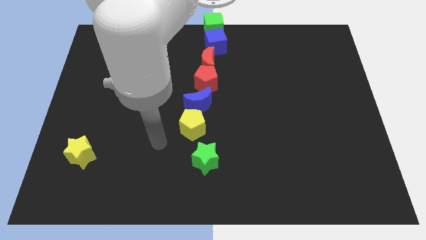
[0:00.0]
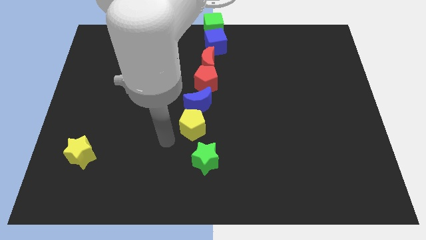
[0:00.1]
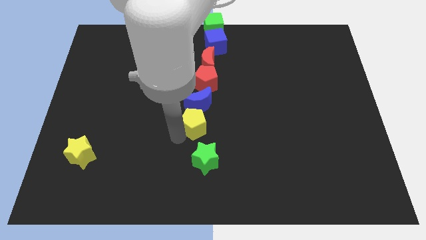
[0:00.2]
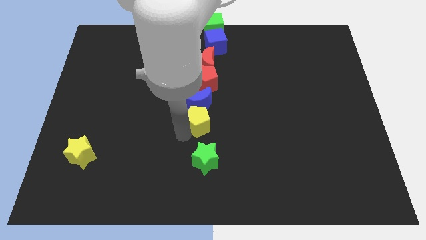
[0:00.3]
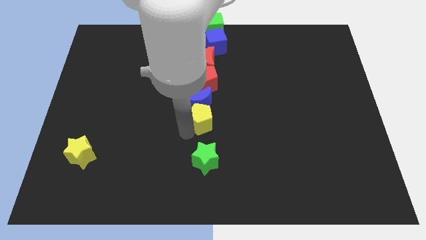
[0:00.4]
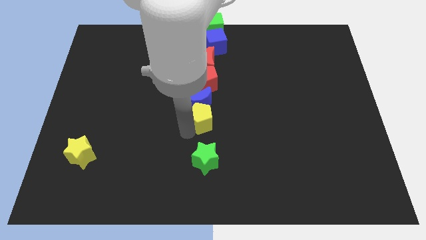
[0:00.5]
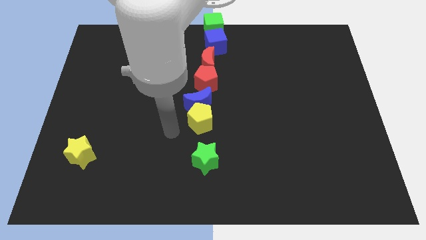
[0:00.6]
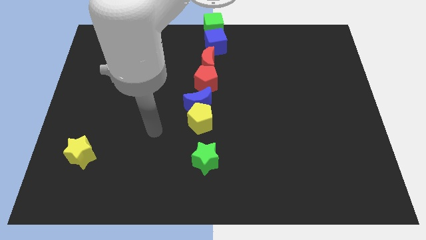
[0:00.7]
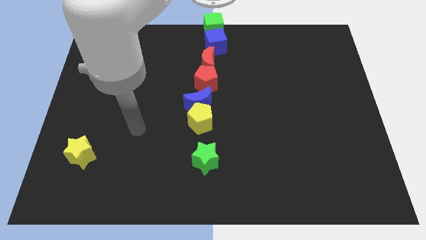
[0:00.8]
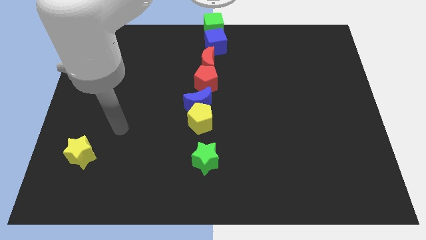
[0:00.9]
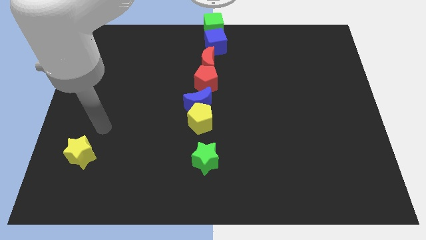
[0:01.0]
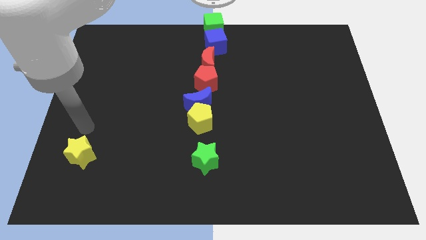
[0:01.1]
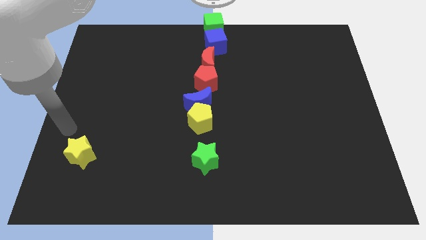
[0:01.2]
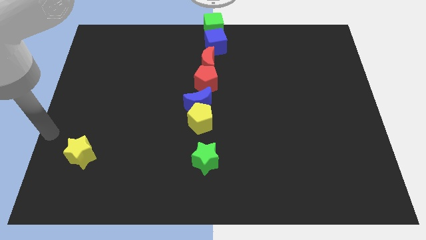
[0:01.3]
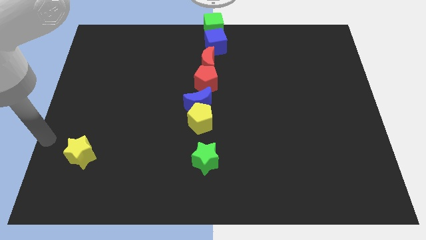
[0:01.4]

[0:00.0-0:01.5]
drag the yellow pentagon slightly towards top

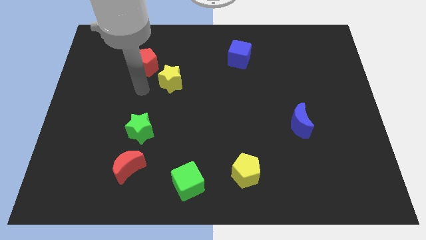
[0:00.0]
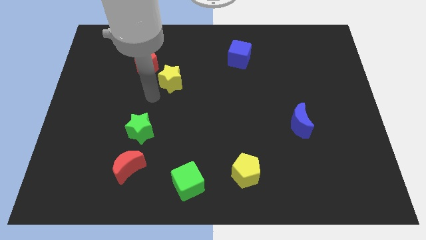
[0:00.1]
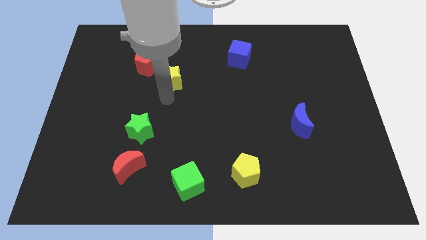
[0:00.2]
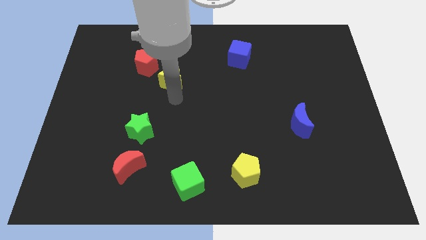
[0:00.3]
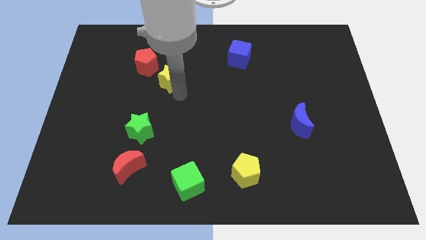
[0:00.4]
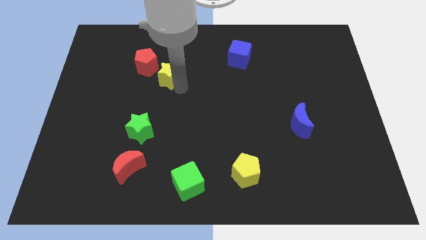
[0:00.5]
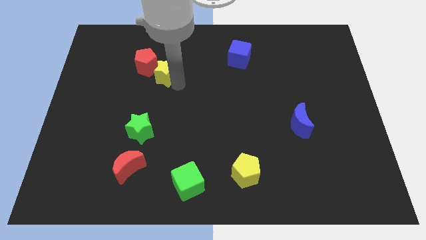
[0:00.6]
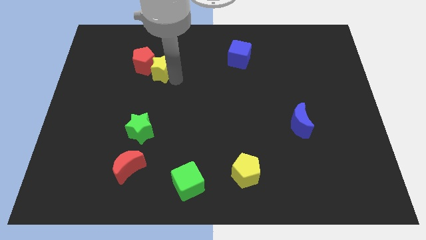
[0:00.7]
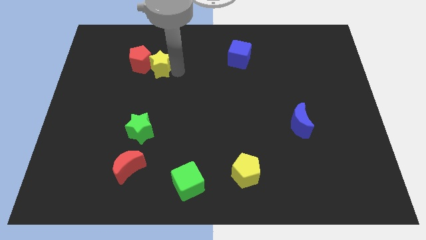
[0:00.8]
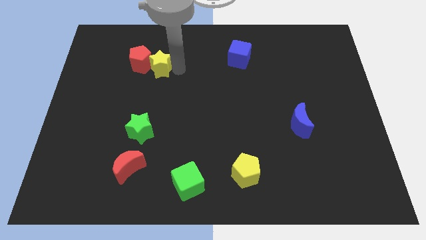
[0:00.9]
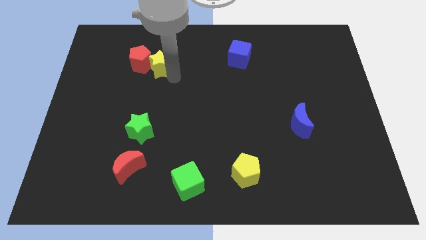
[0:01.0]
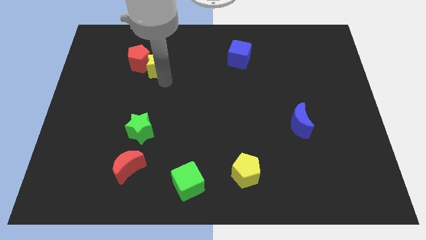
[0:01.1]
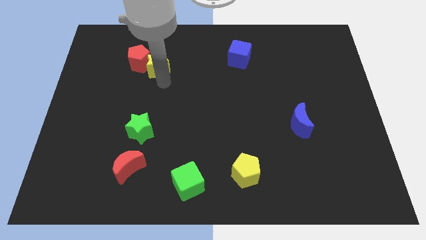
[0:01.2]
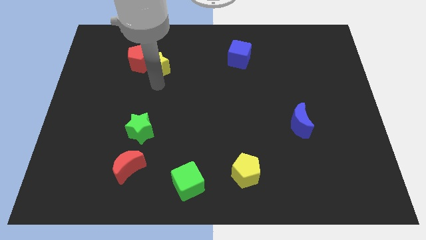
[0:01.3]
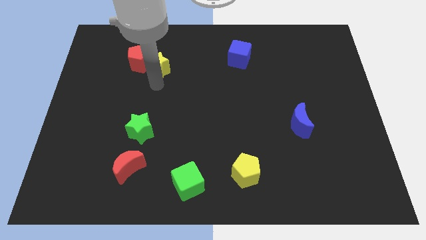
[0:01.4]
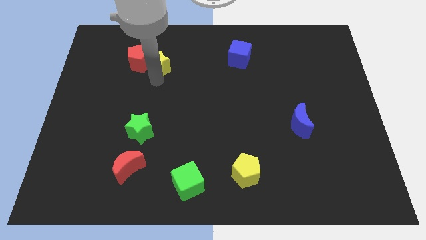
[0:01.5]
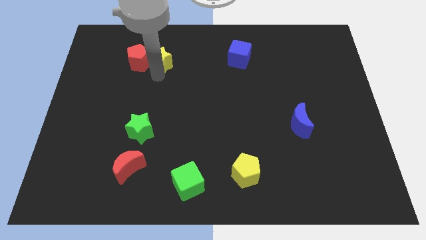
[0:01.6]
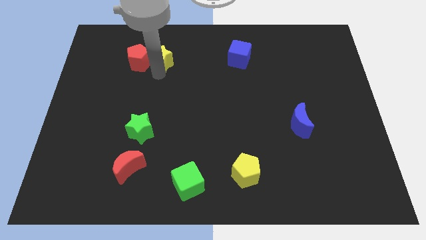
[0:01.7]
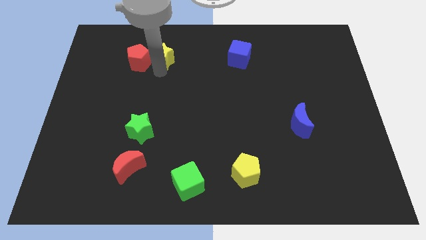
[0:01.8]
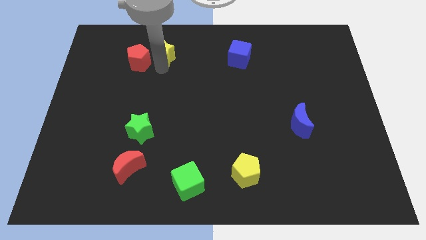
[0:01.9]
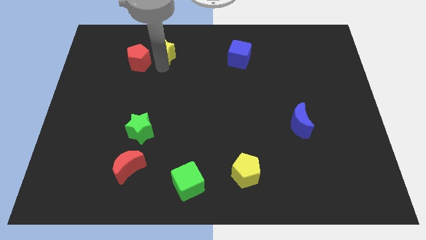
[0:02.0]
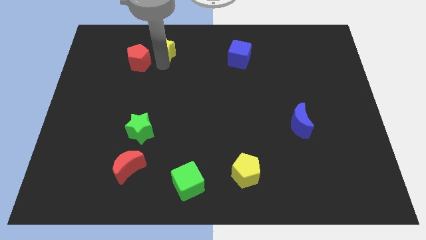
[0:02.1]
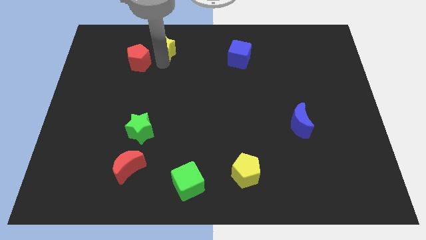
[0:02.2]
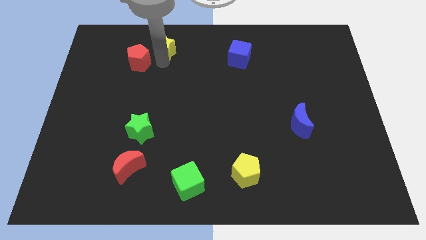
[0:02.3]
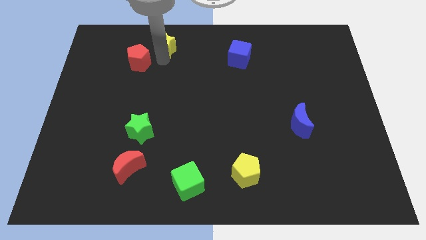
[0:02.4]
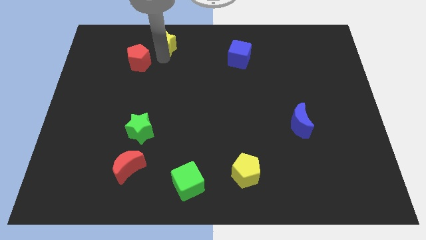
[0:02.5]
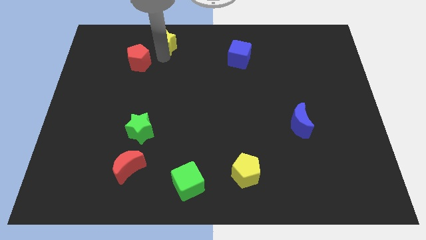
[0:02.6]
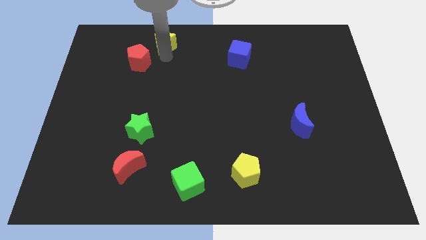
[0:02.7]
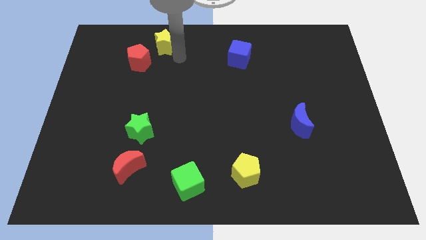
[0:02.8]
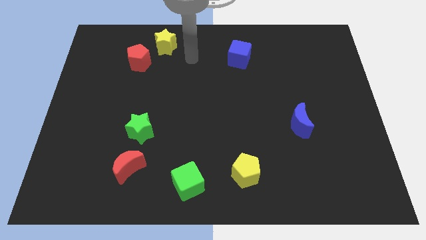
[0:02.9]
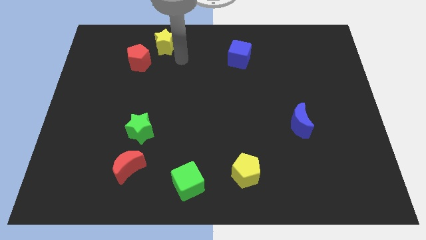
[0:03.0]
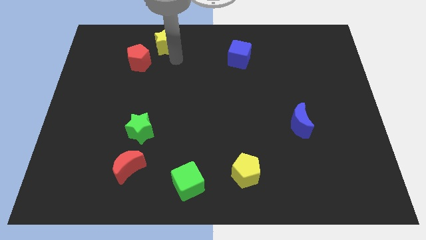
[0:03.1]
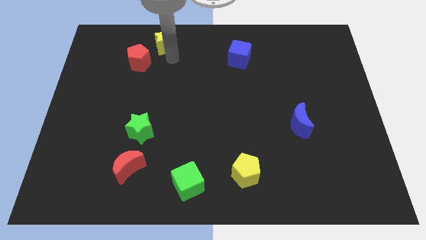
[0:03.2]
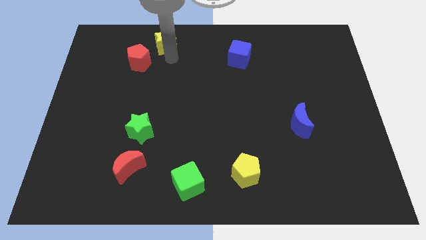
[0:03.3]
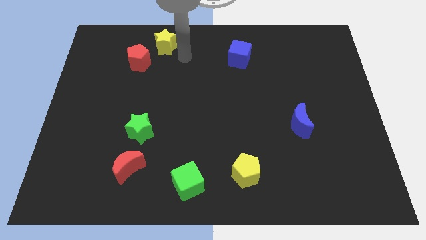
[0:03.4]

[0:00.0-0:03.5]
slide the yellow star slightly towards up

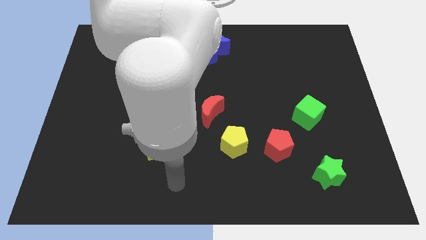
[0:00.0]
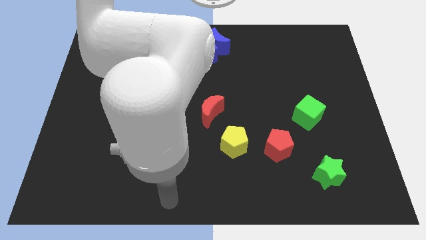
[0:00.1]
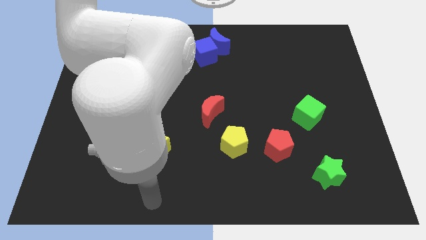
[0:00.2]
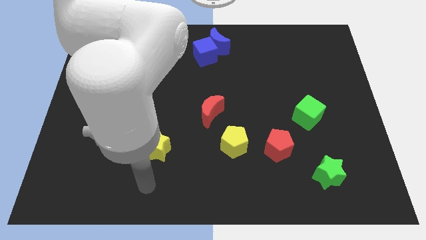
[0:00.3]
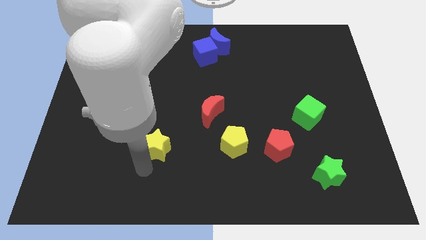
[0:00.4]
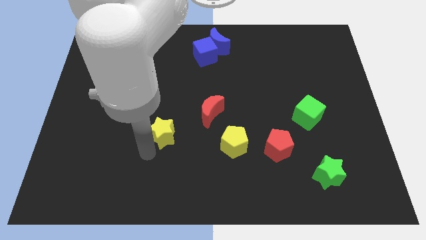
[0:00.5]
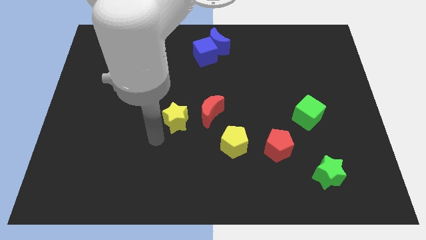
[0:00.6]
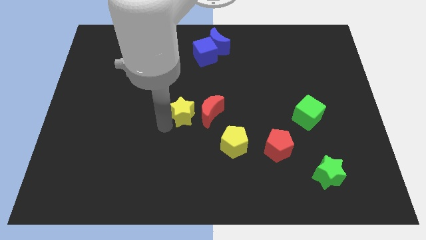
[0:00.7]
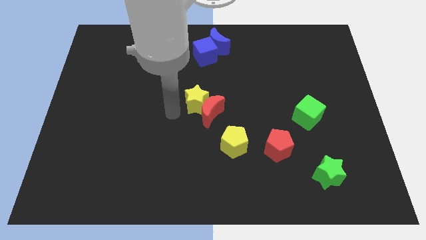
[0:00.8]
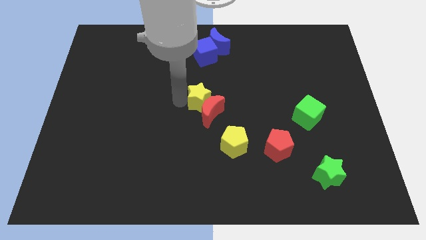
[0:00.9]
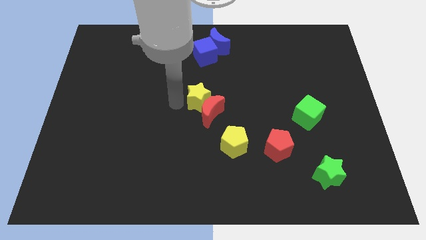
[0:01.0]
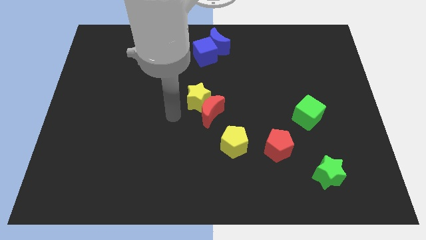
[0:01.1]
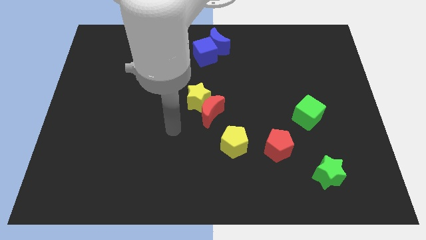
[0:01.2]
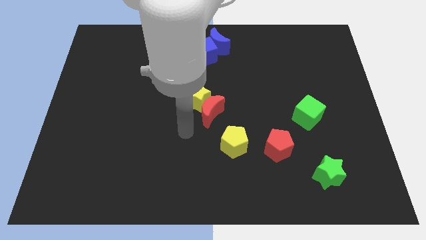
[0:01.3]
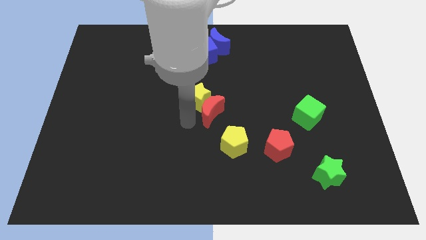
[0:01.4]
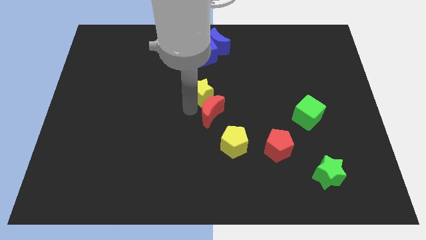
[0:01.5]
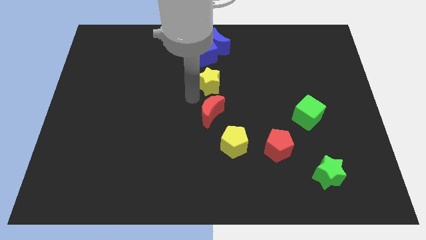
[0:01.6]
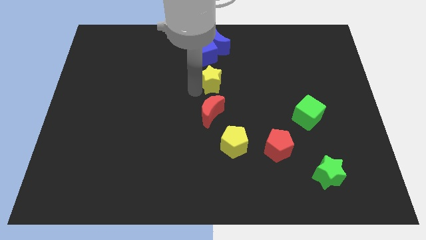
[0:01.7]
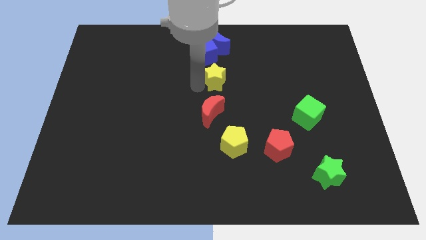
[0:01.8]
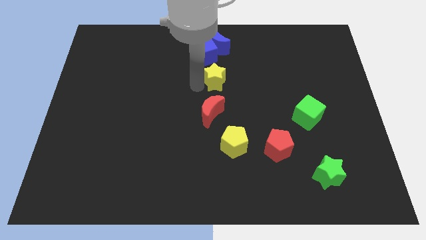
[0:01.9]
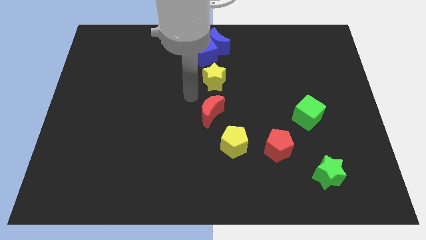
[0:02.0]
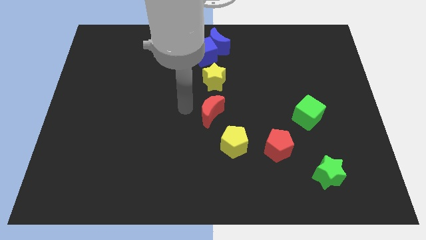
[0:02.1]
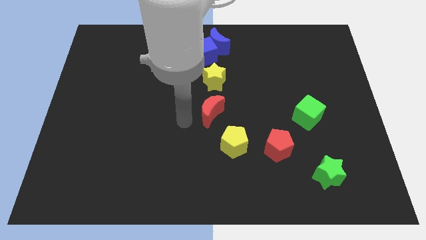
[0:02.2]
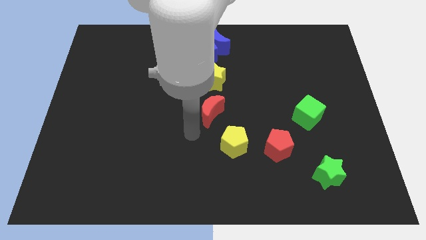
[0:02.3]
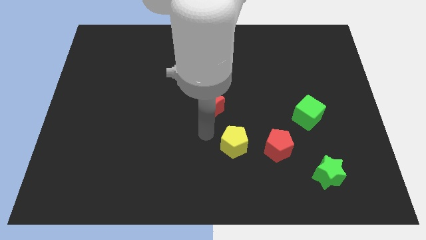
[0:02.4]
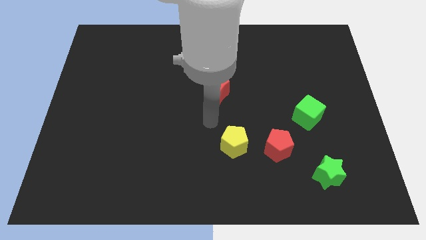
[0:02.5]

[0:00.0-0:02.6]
move the yellow star towards the blue cube

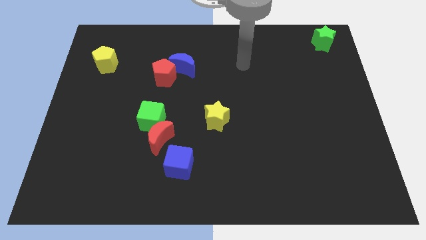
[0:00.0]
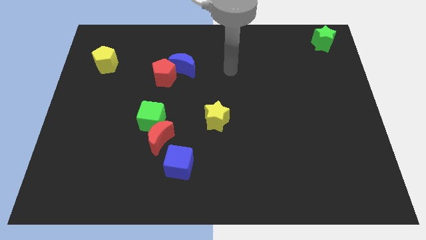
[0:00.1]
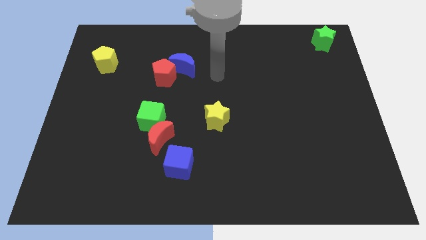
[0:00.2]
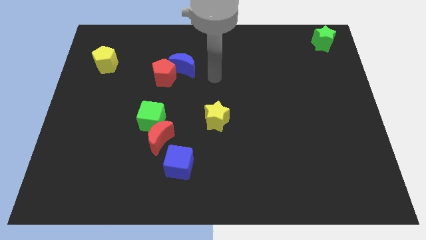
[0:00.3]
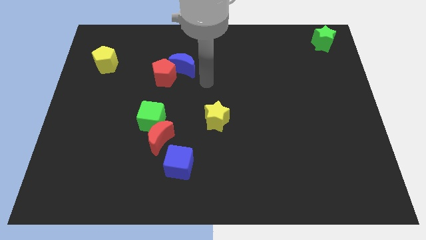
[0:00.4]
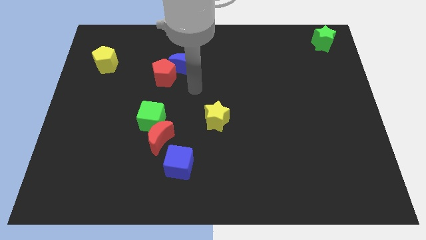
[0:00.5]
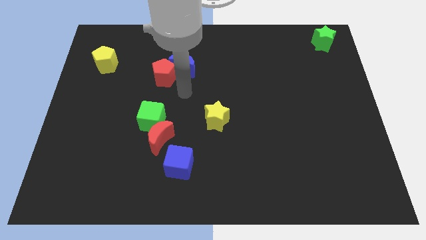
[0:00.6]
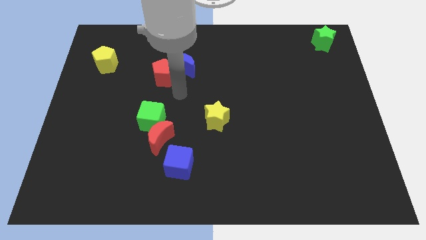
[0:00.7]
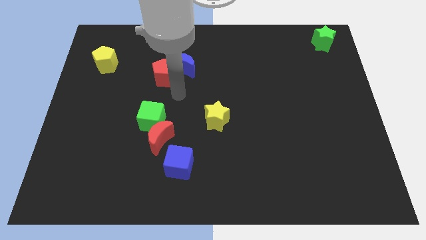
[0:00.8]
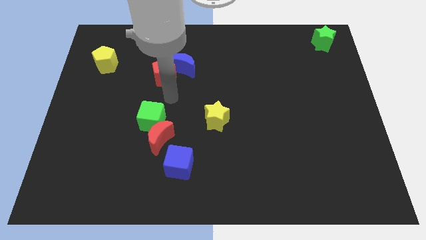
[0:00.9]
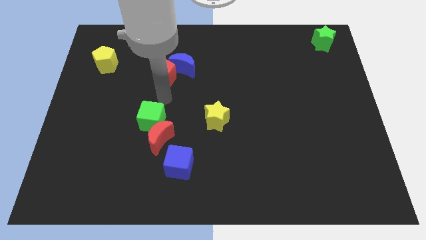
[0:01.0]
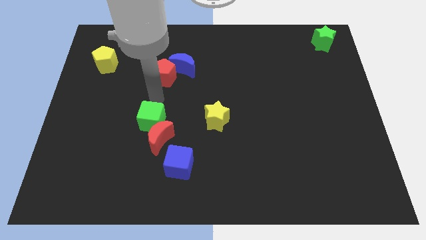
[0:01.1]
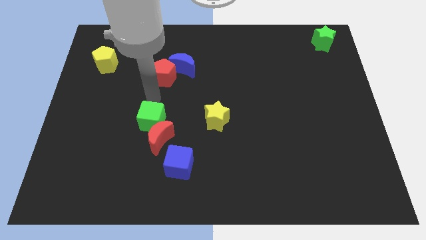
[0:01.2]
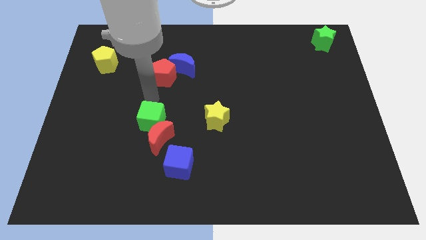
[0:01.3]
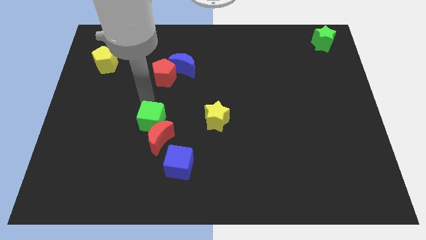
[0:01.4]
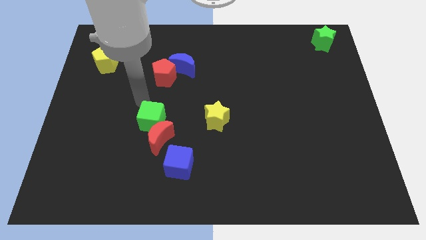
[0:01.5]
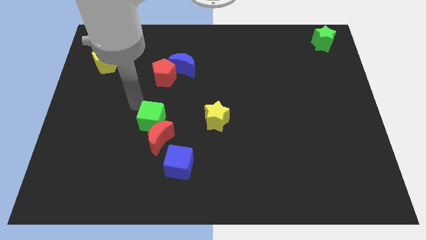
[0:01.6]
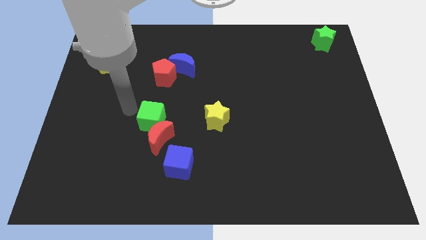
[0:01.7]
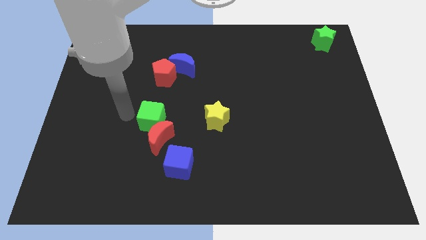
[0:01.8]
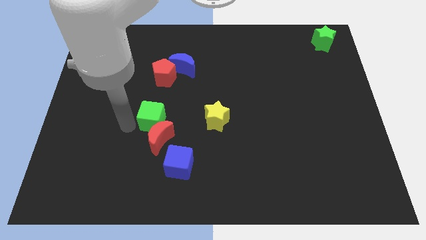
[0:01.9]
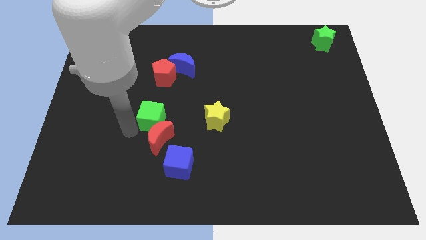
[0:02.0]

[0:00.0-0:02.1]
move your arm left to the green cube
